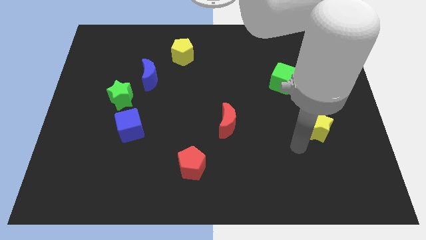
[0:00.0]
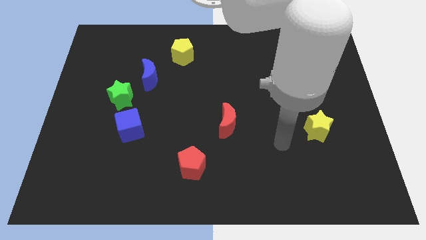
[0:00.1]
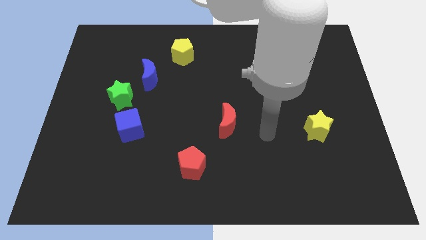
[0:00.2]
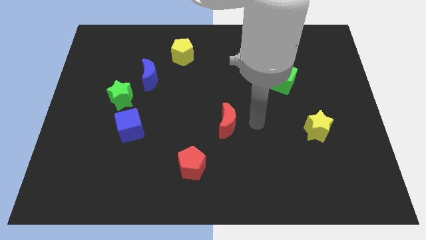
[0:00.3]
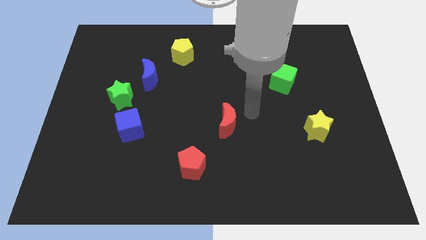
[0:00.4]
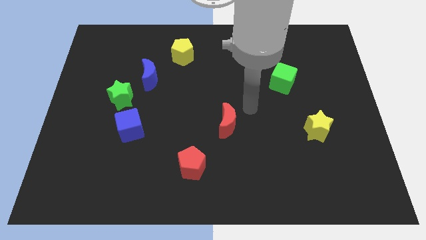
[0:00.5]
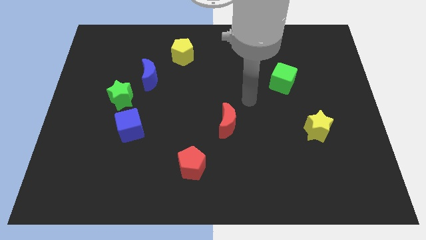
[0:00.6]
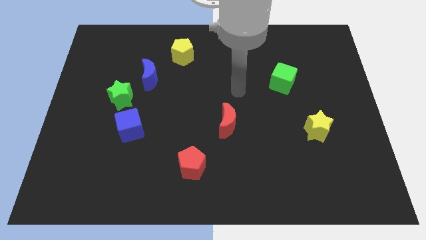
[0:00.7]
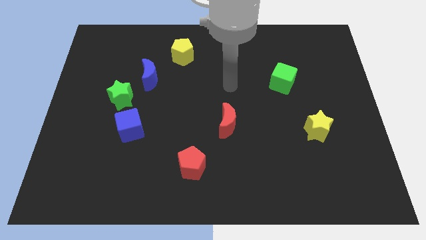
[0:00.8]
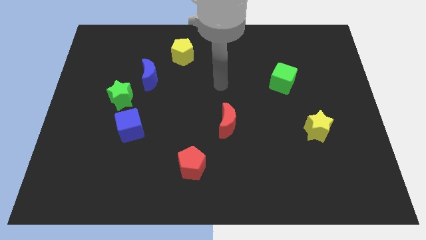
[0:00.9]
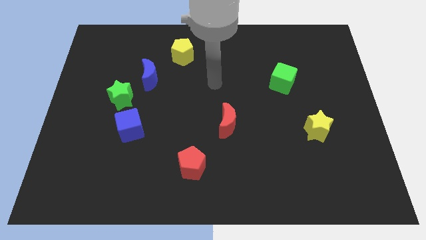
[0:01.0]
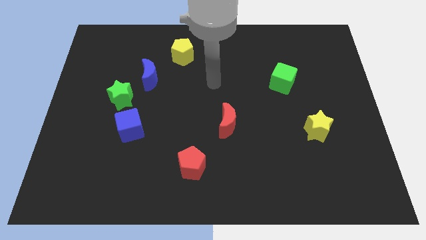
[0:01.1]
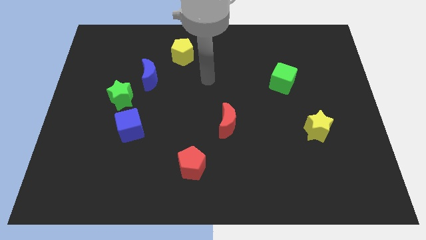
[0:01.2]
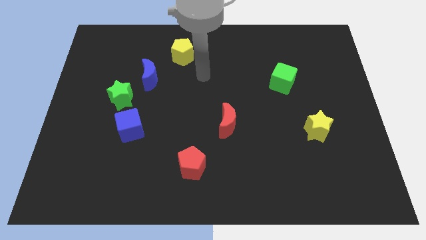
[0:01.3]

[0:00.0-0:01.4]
place your arm parallel to the right side of the blue moon

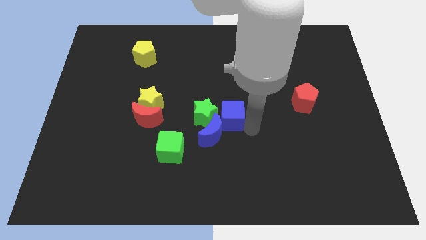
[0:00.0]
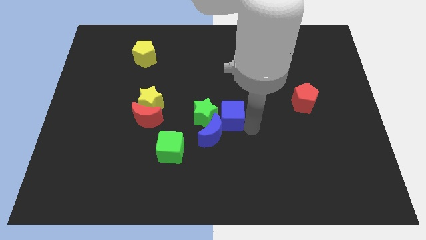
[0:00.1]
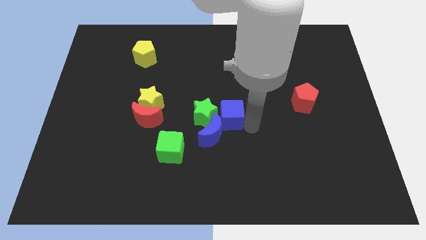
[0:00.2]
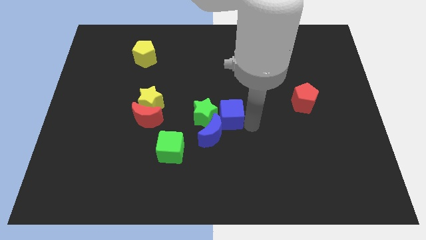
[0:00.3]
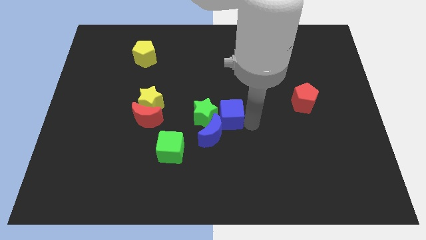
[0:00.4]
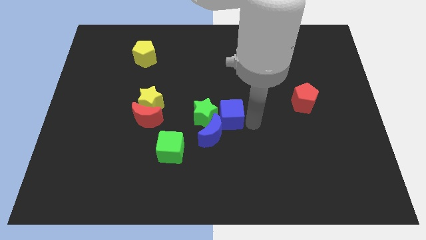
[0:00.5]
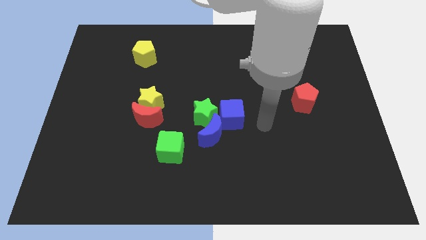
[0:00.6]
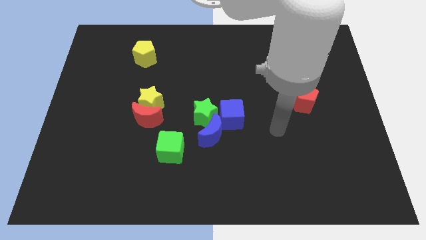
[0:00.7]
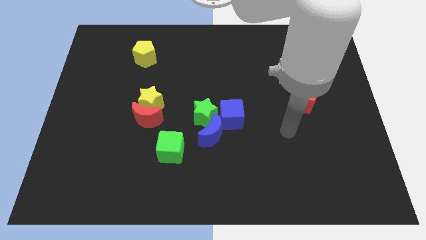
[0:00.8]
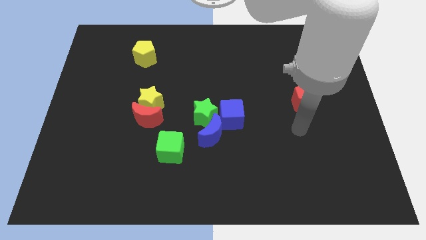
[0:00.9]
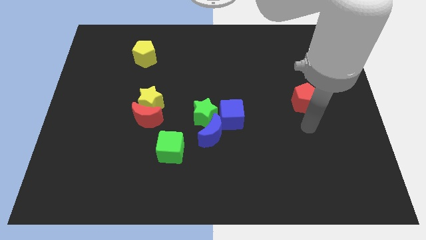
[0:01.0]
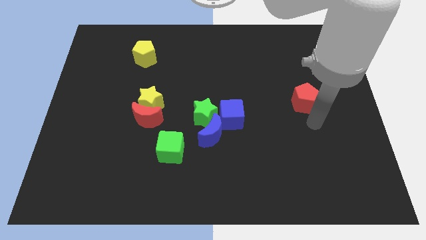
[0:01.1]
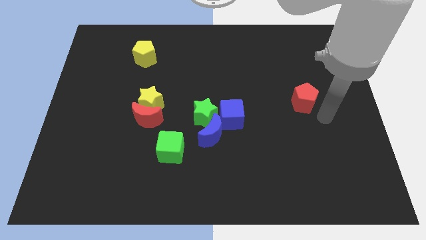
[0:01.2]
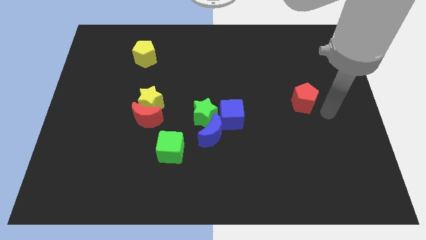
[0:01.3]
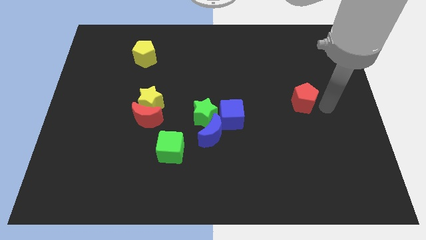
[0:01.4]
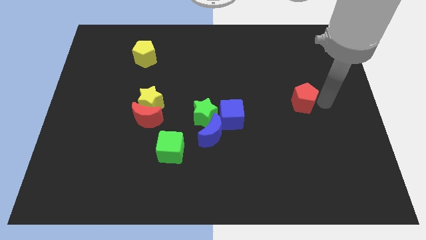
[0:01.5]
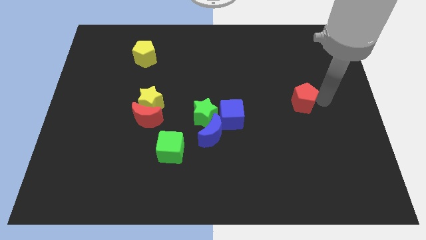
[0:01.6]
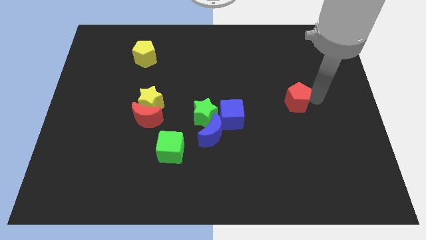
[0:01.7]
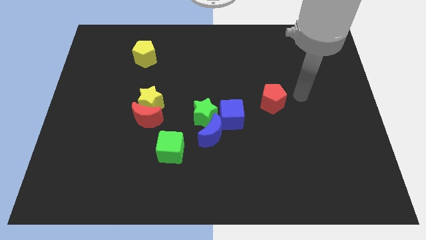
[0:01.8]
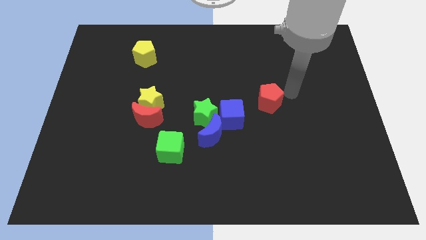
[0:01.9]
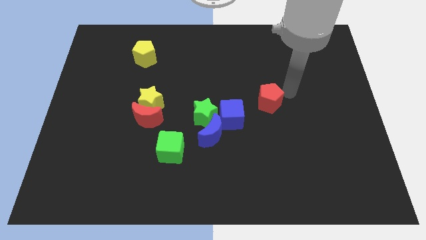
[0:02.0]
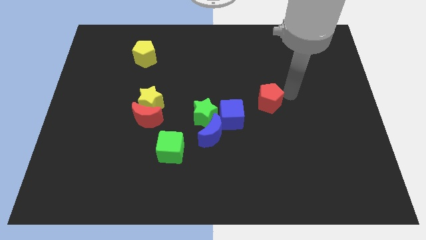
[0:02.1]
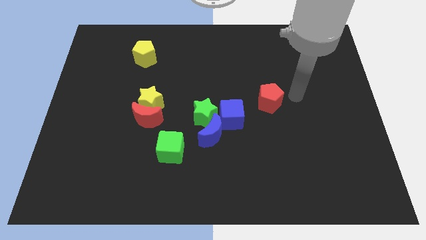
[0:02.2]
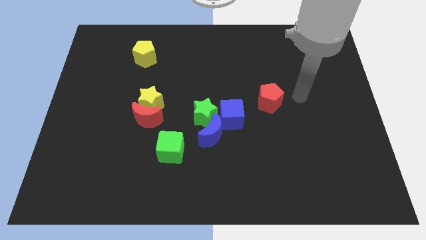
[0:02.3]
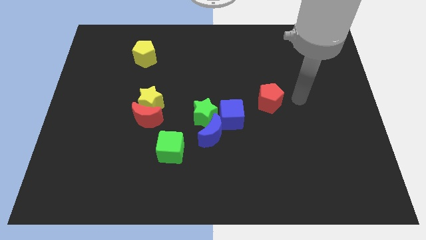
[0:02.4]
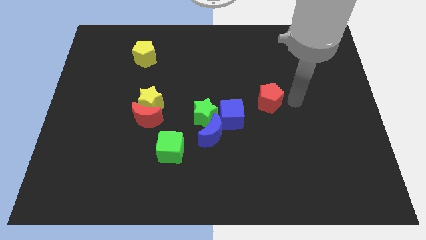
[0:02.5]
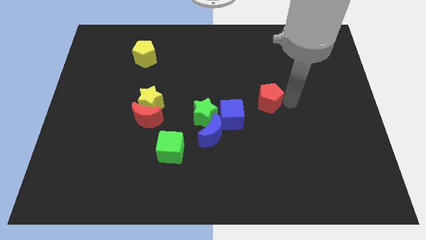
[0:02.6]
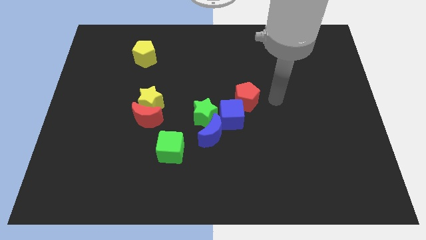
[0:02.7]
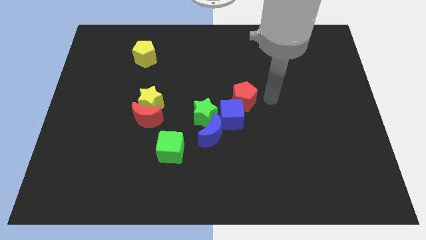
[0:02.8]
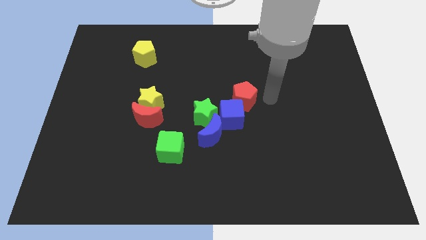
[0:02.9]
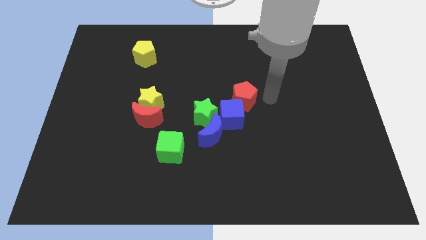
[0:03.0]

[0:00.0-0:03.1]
move the red pentagon above the blue cube at the center

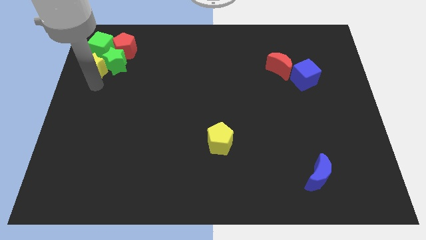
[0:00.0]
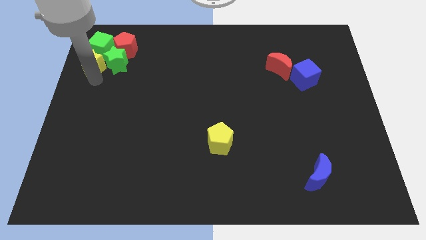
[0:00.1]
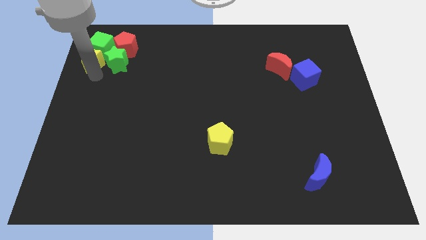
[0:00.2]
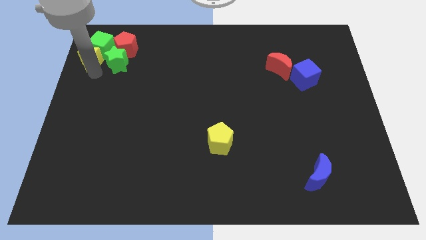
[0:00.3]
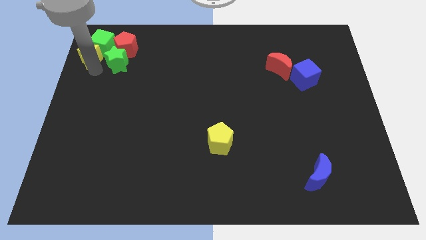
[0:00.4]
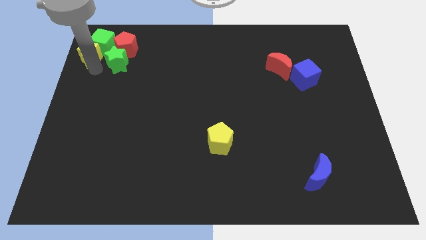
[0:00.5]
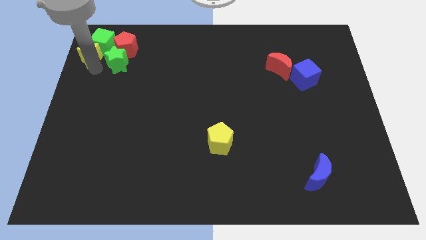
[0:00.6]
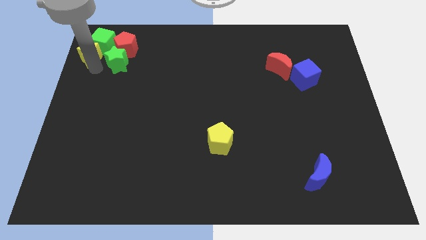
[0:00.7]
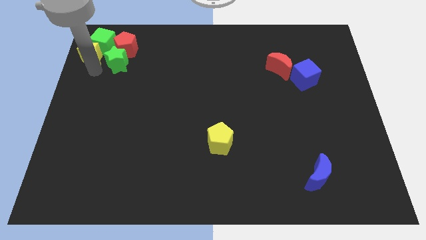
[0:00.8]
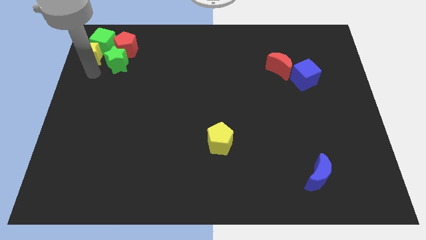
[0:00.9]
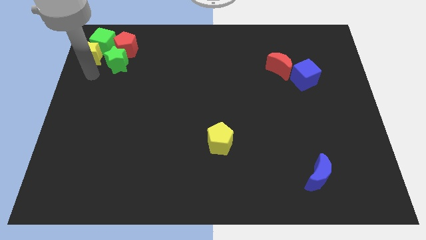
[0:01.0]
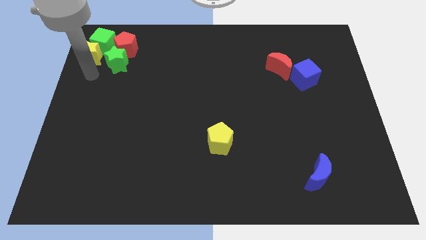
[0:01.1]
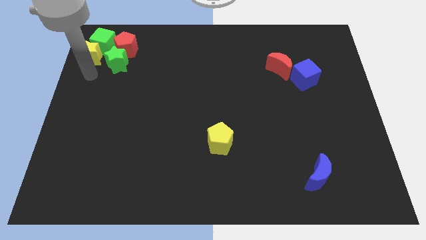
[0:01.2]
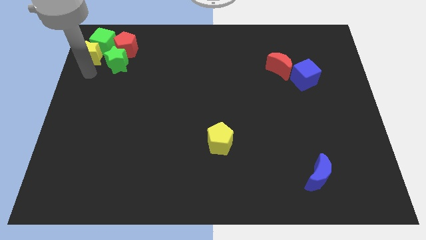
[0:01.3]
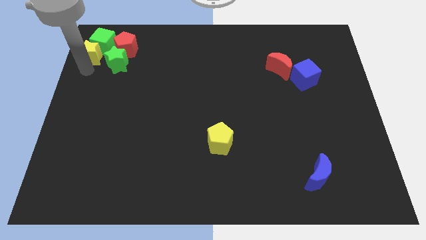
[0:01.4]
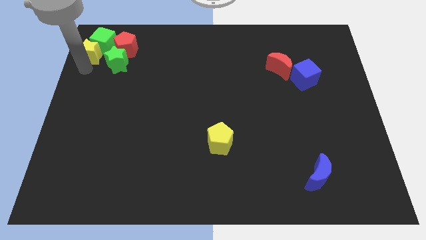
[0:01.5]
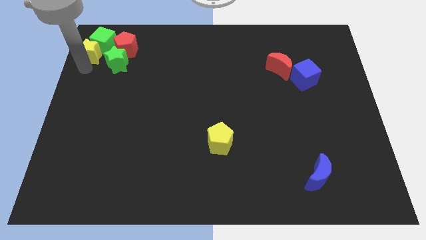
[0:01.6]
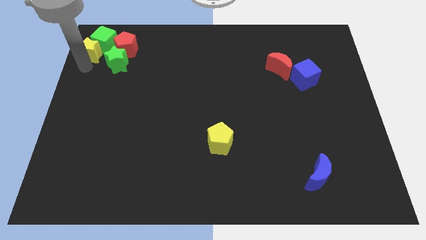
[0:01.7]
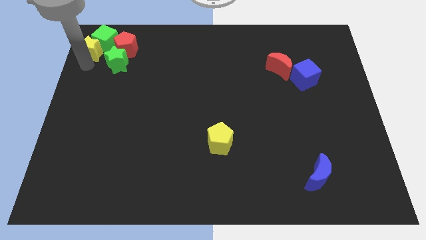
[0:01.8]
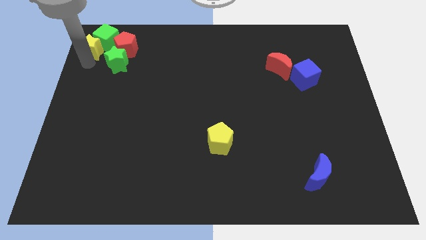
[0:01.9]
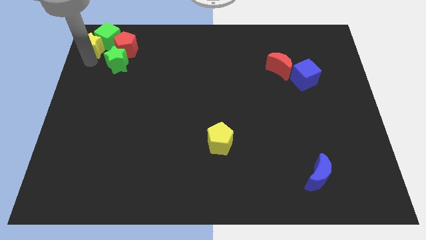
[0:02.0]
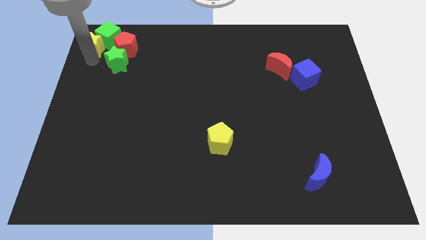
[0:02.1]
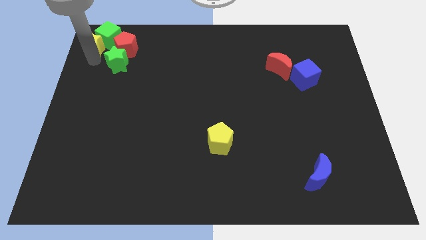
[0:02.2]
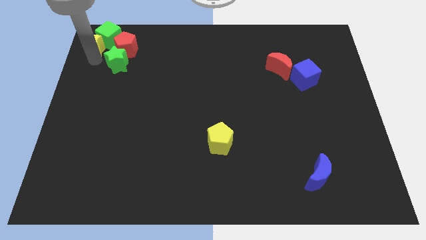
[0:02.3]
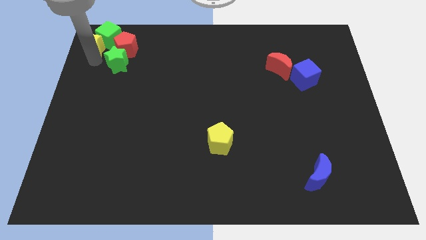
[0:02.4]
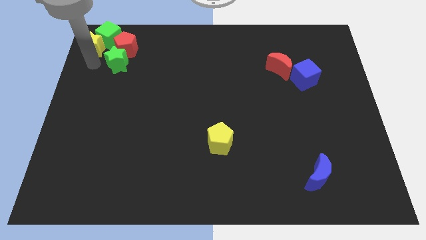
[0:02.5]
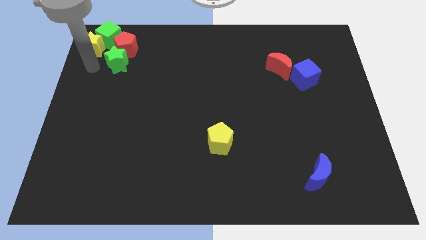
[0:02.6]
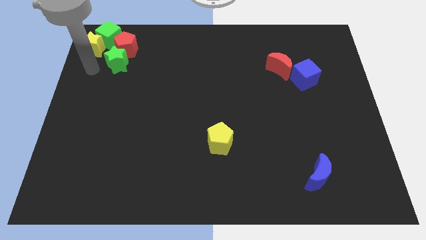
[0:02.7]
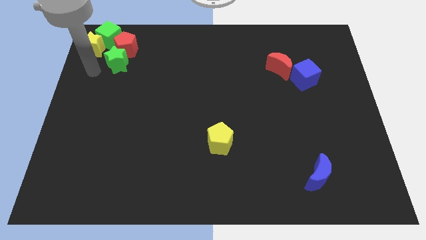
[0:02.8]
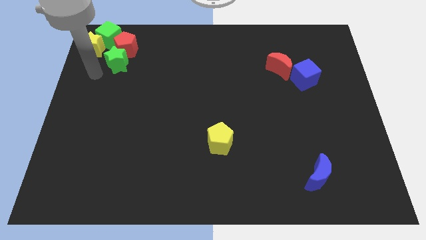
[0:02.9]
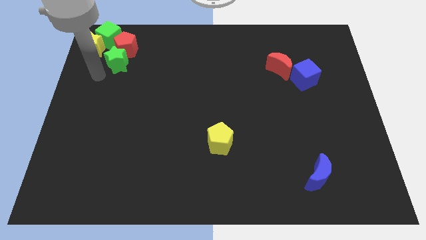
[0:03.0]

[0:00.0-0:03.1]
slide the yellow star into the green cube

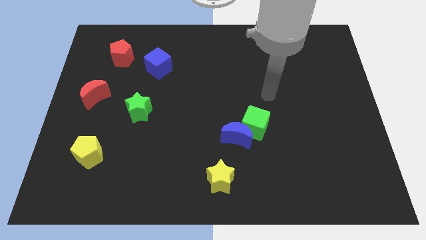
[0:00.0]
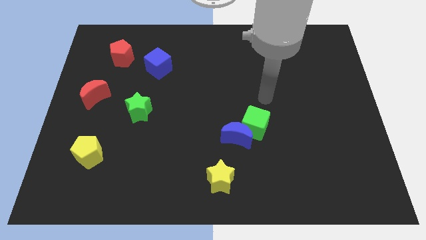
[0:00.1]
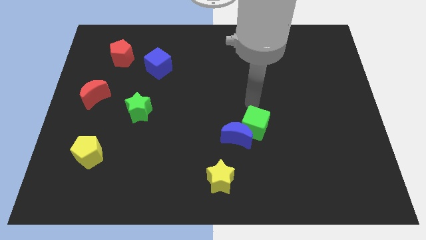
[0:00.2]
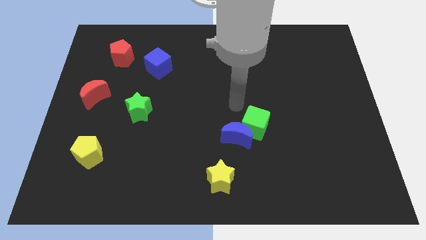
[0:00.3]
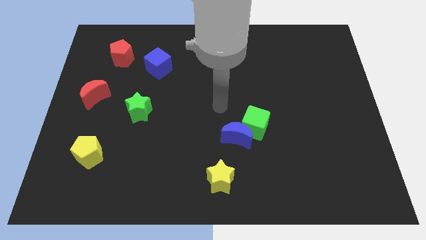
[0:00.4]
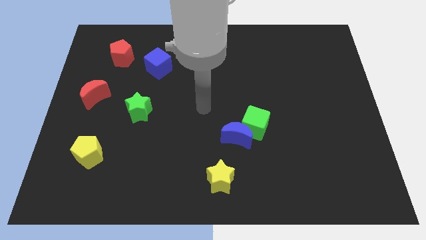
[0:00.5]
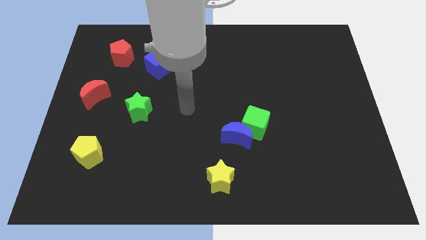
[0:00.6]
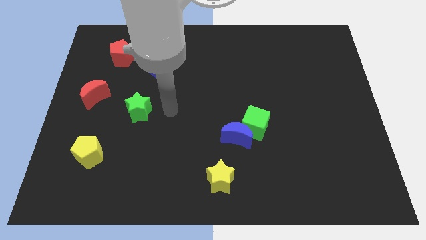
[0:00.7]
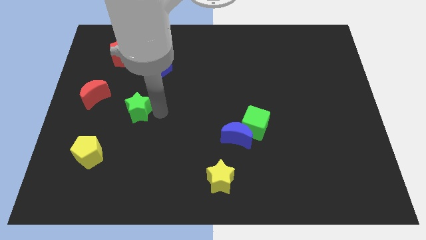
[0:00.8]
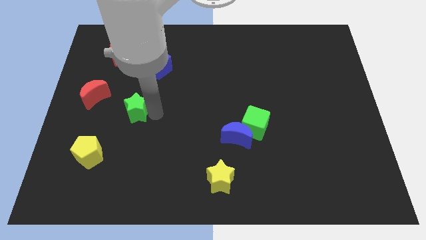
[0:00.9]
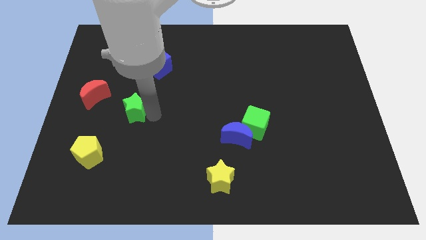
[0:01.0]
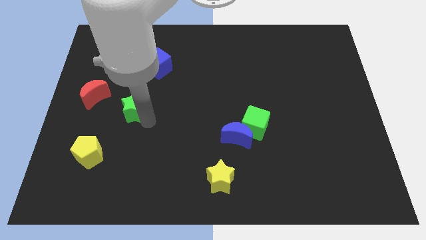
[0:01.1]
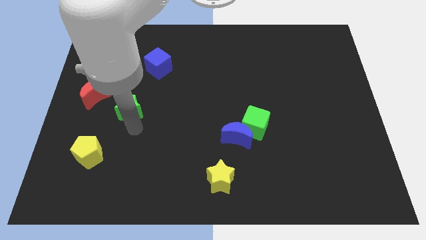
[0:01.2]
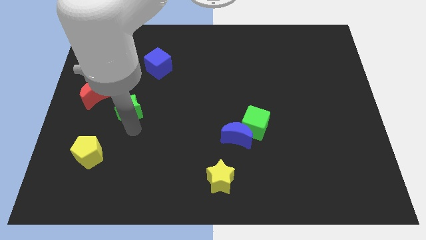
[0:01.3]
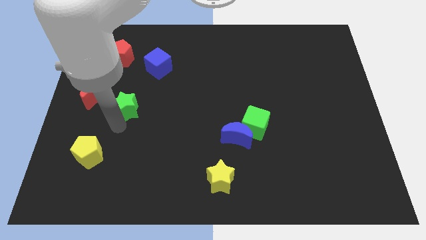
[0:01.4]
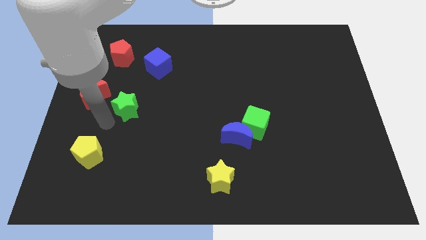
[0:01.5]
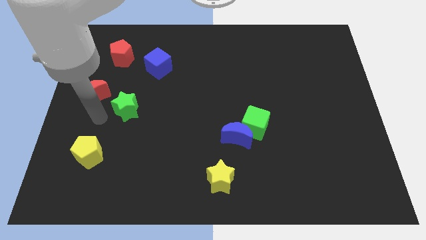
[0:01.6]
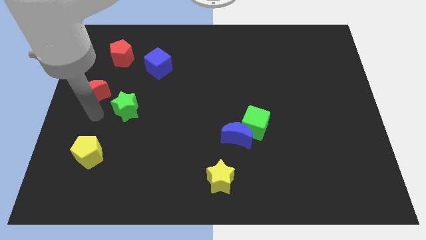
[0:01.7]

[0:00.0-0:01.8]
slightly move the green star towards the left
